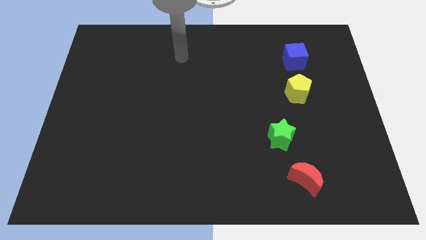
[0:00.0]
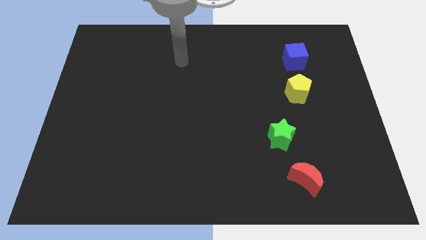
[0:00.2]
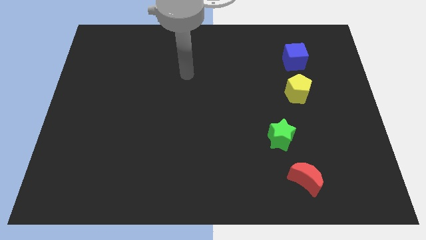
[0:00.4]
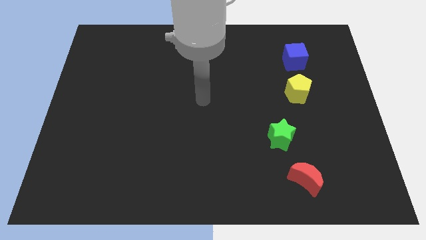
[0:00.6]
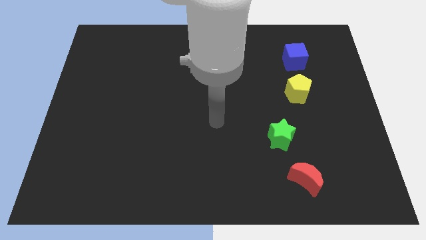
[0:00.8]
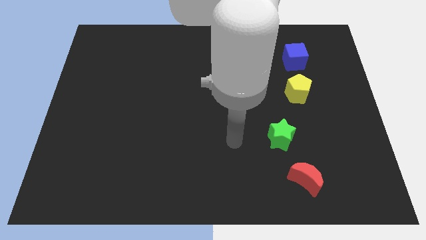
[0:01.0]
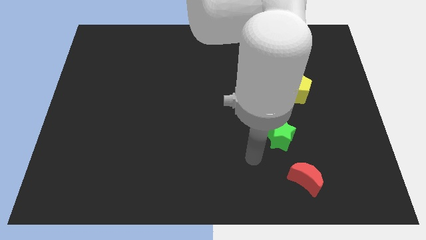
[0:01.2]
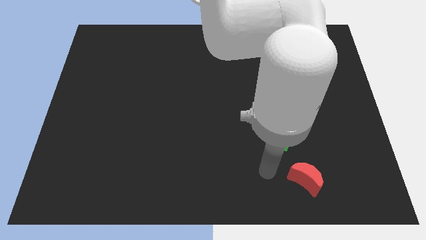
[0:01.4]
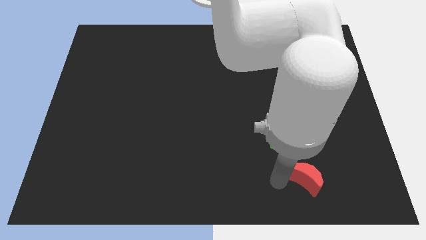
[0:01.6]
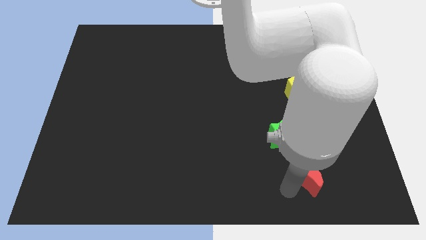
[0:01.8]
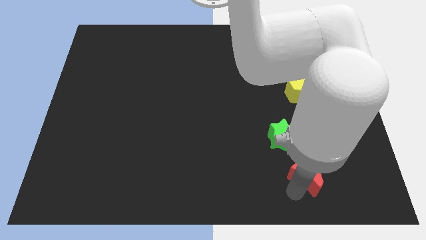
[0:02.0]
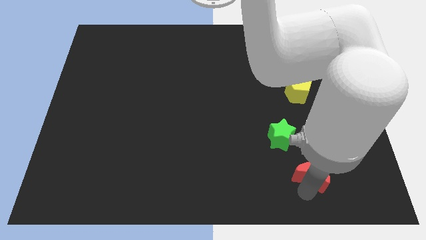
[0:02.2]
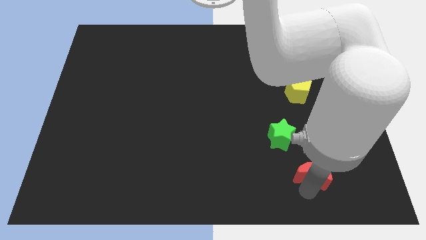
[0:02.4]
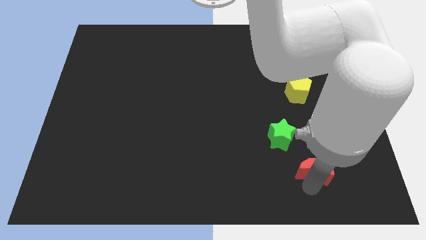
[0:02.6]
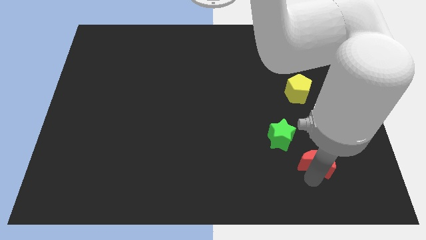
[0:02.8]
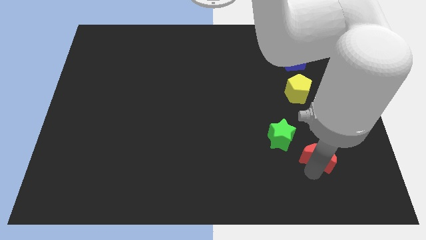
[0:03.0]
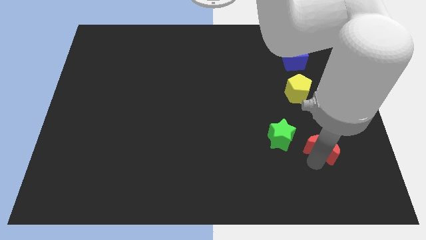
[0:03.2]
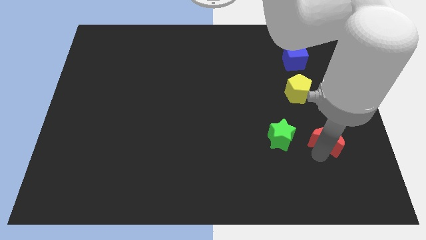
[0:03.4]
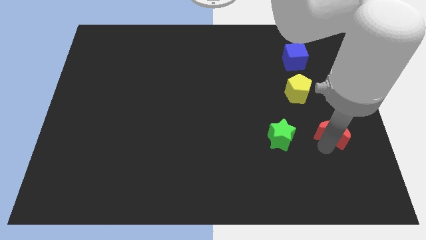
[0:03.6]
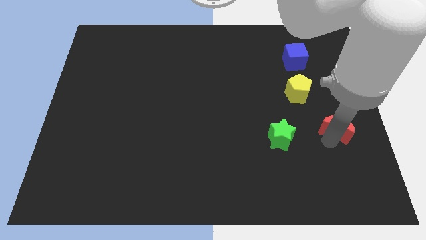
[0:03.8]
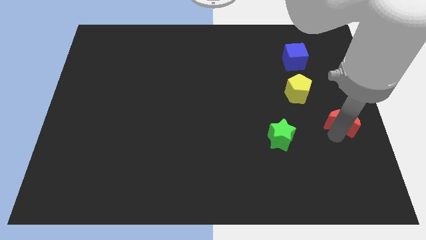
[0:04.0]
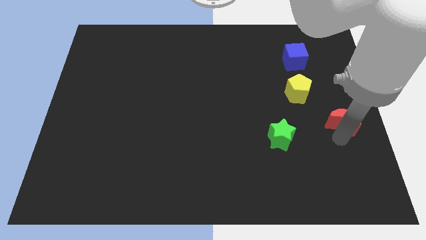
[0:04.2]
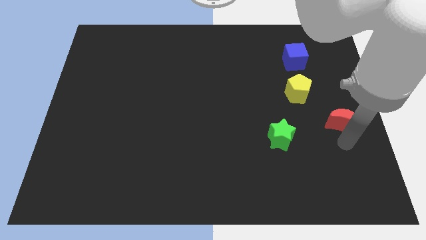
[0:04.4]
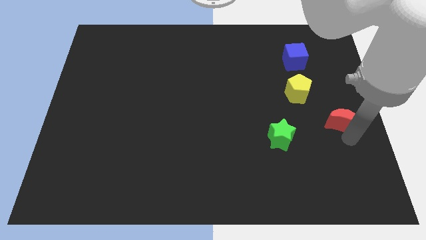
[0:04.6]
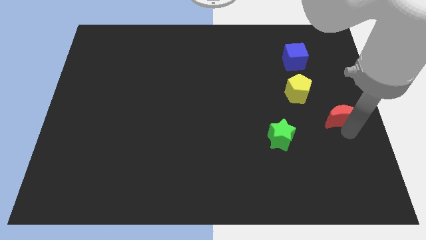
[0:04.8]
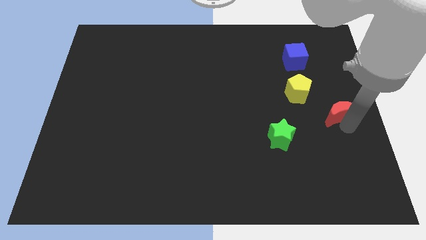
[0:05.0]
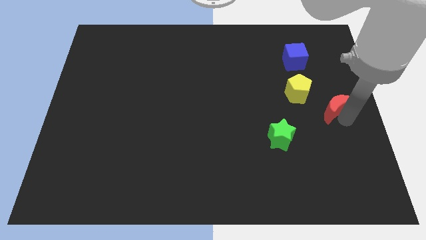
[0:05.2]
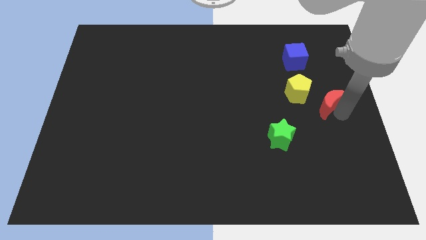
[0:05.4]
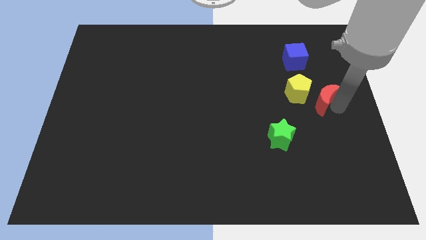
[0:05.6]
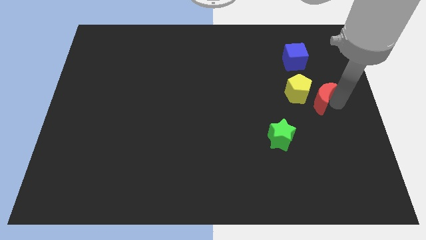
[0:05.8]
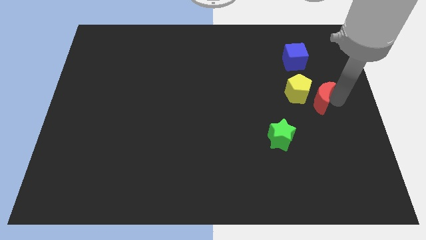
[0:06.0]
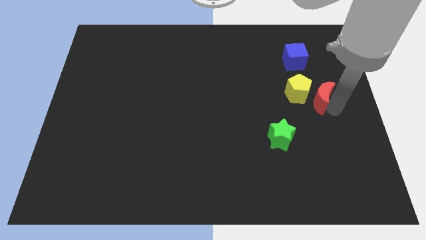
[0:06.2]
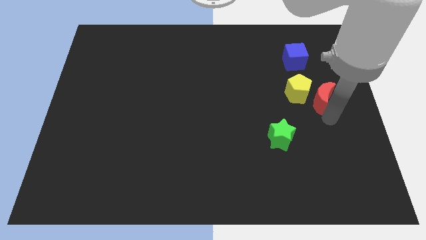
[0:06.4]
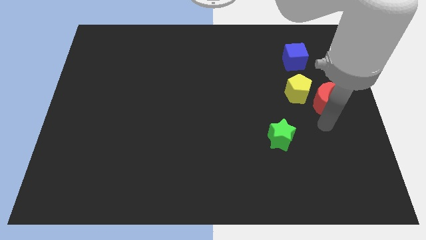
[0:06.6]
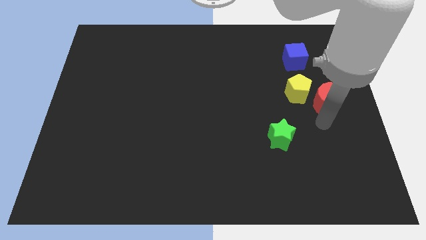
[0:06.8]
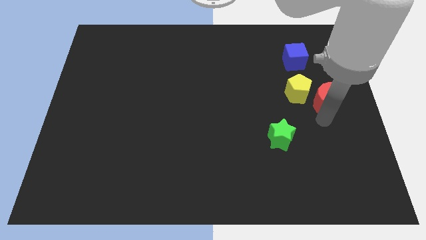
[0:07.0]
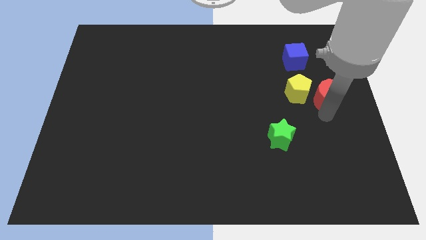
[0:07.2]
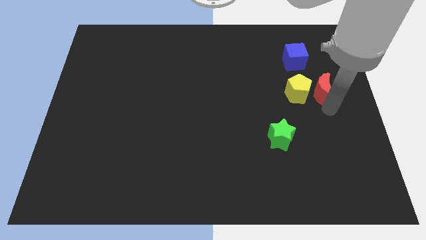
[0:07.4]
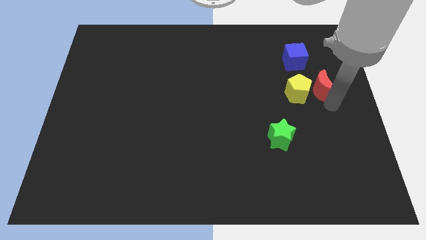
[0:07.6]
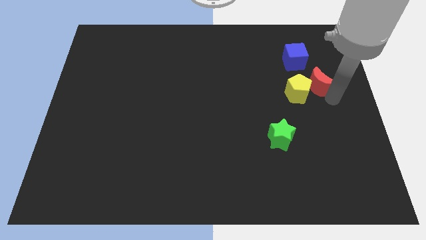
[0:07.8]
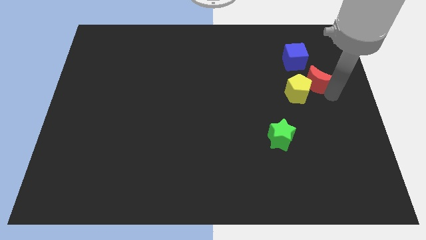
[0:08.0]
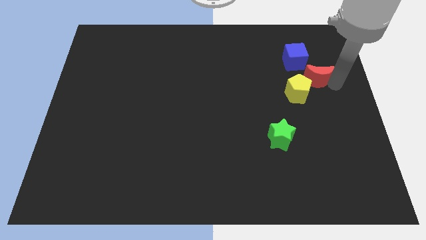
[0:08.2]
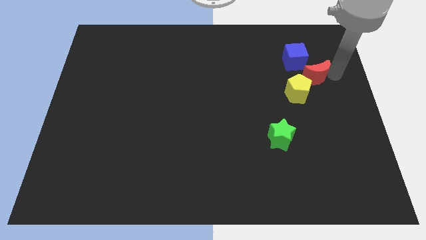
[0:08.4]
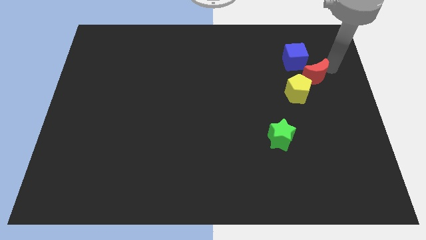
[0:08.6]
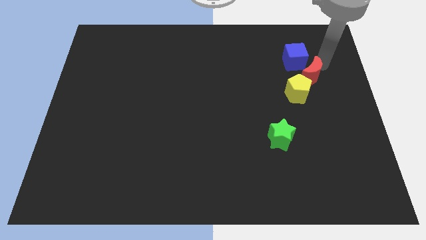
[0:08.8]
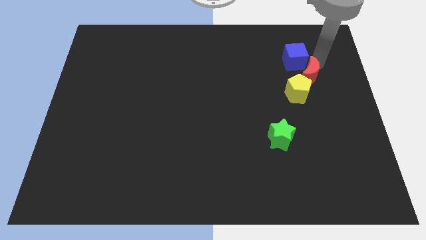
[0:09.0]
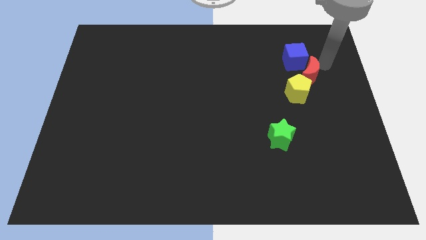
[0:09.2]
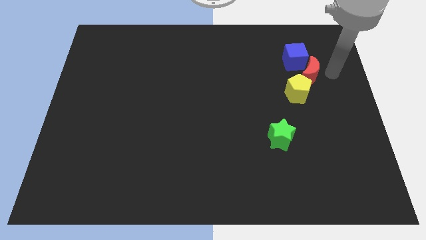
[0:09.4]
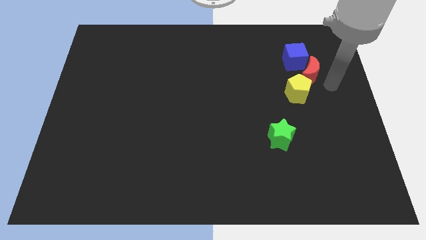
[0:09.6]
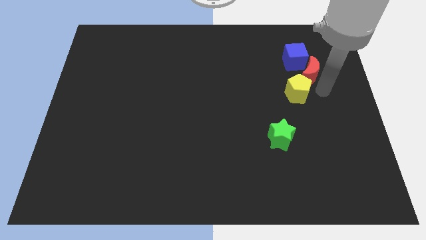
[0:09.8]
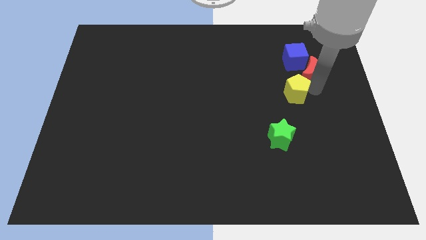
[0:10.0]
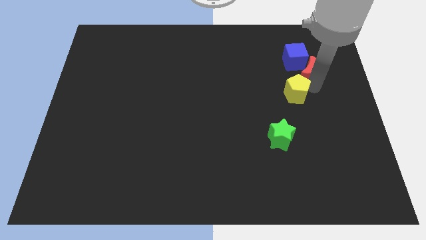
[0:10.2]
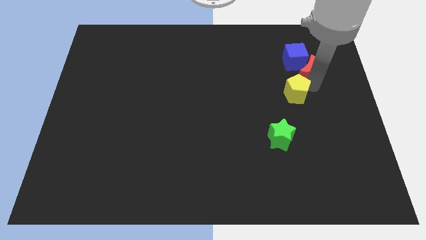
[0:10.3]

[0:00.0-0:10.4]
put the red moon to the blue block

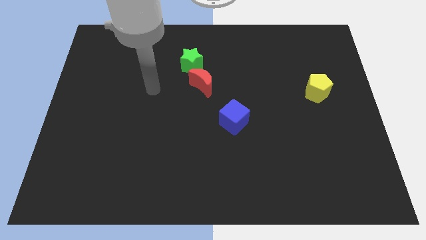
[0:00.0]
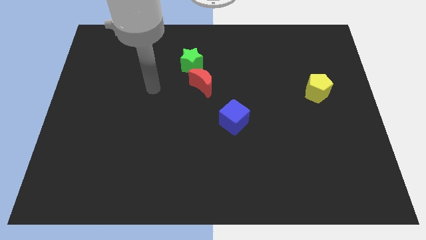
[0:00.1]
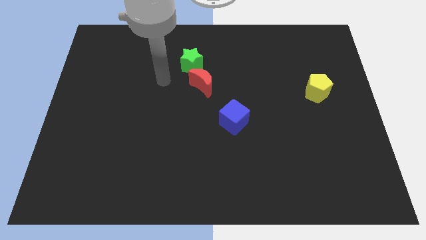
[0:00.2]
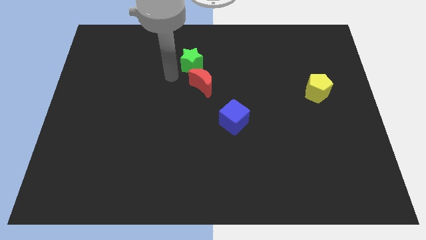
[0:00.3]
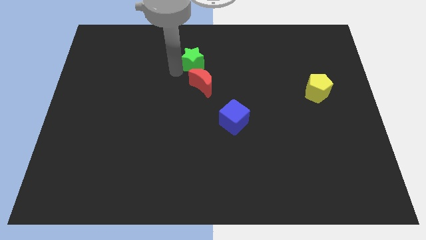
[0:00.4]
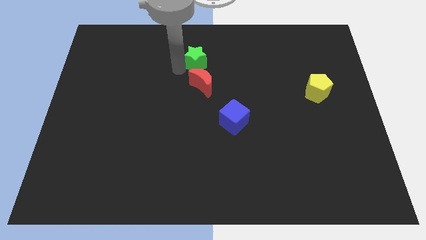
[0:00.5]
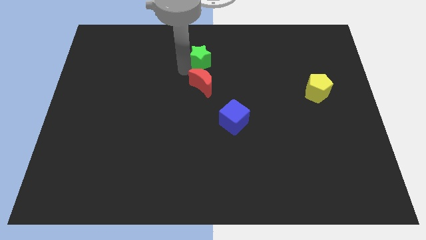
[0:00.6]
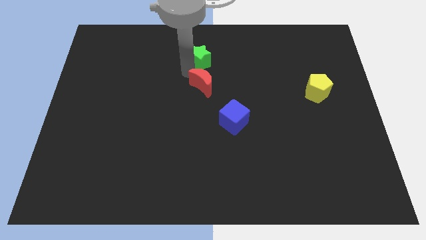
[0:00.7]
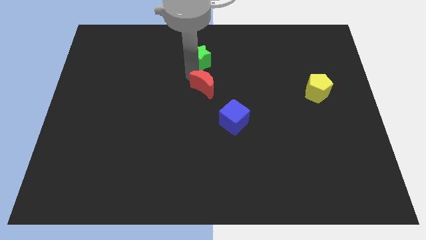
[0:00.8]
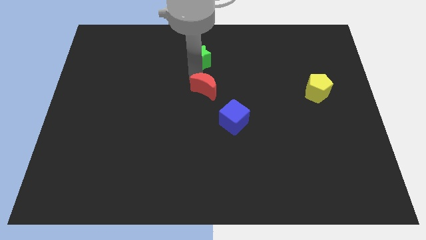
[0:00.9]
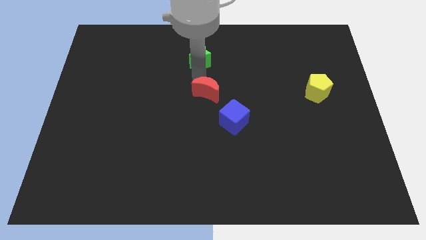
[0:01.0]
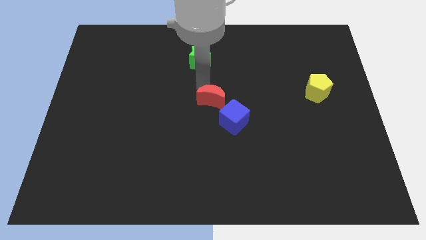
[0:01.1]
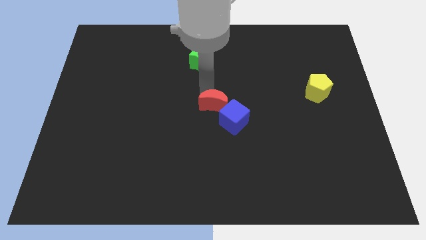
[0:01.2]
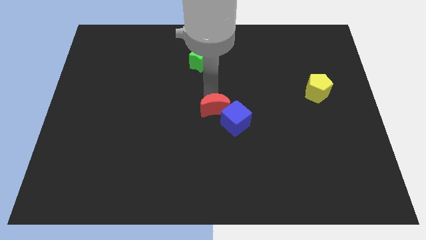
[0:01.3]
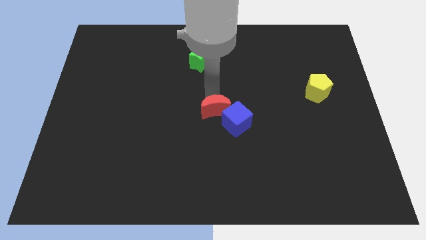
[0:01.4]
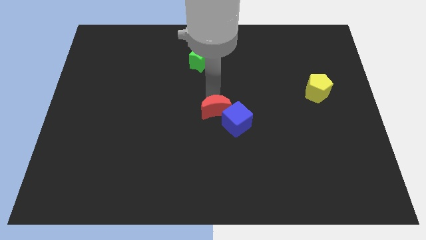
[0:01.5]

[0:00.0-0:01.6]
push the moon close to the cube

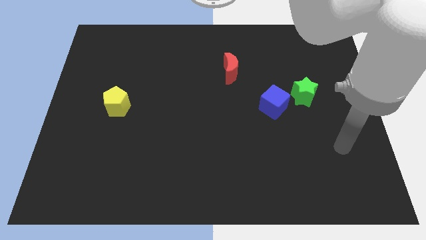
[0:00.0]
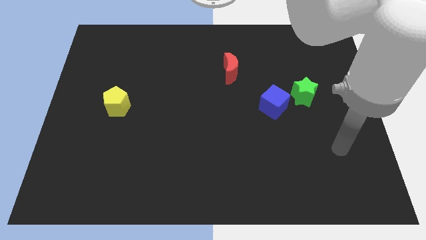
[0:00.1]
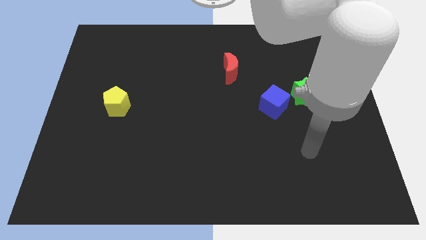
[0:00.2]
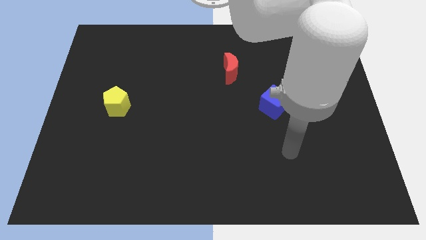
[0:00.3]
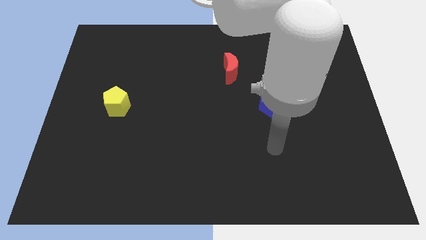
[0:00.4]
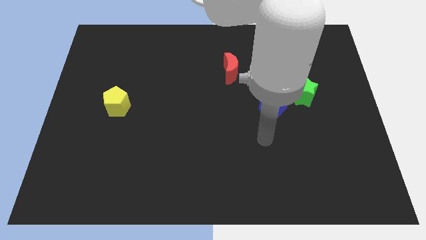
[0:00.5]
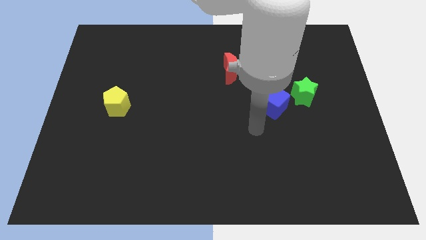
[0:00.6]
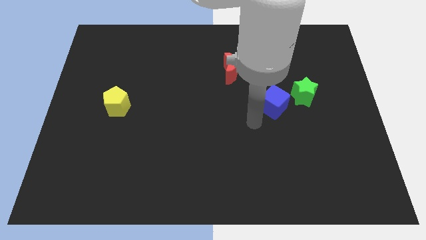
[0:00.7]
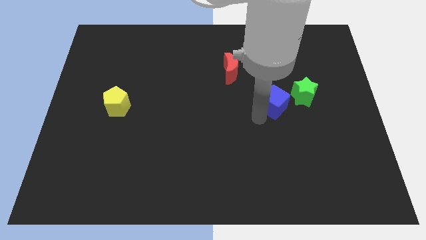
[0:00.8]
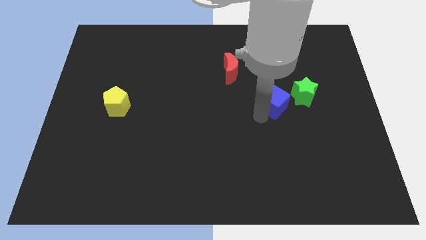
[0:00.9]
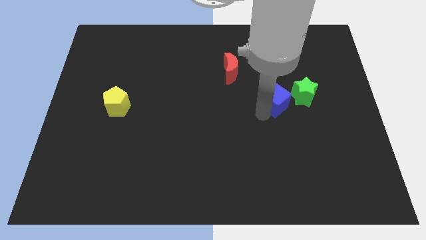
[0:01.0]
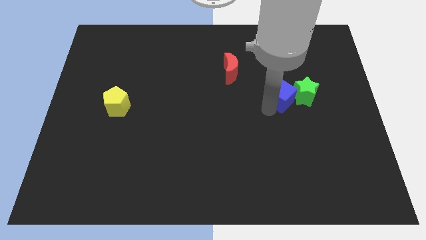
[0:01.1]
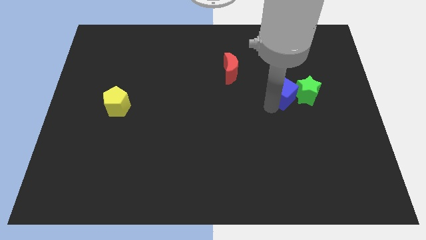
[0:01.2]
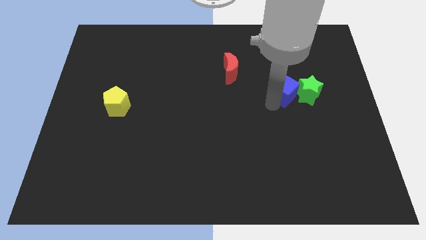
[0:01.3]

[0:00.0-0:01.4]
push the cube towards the star
